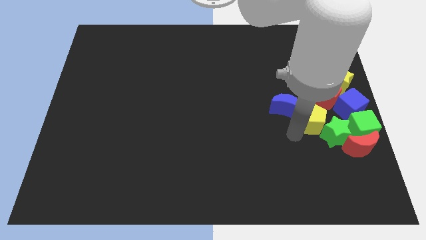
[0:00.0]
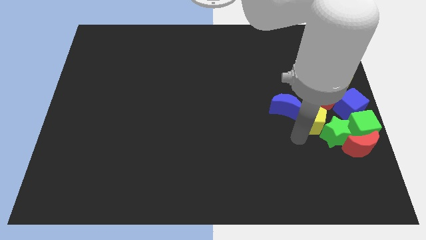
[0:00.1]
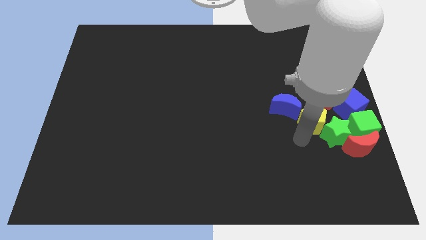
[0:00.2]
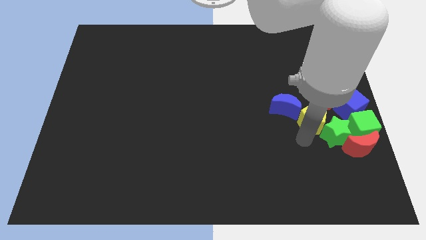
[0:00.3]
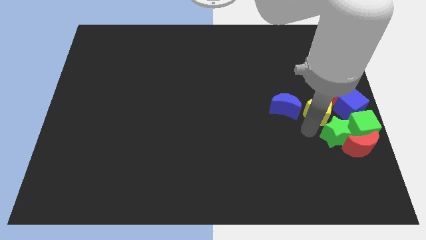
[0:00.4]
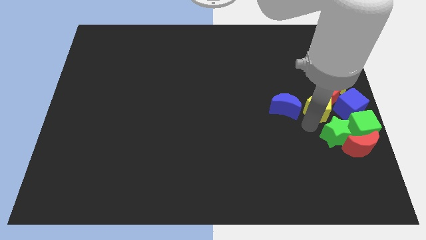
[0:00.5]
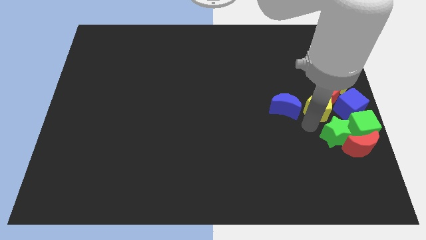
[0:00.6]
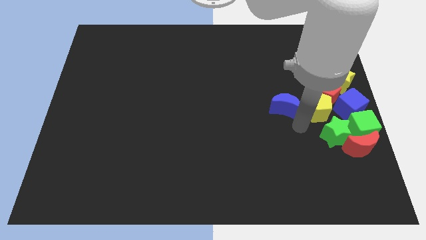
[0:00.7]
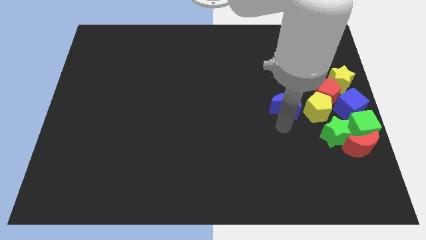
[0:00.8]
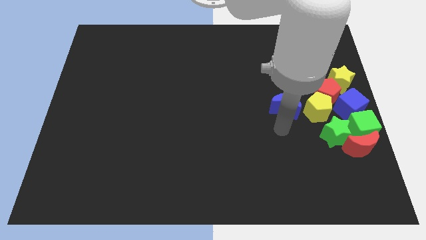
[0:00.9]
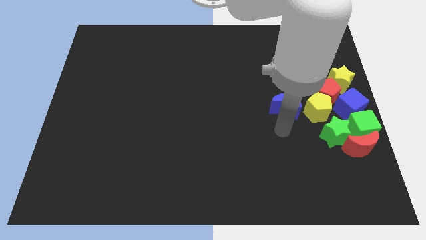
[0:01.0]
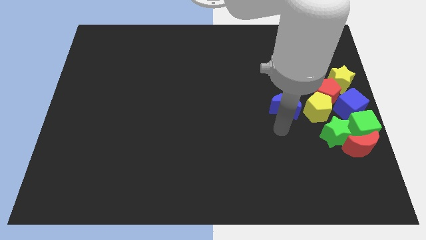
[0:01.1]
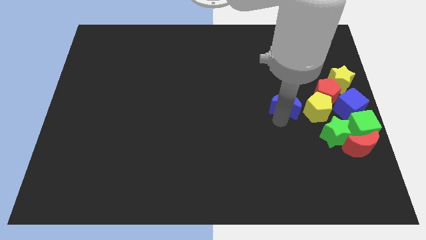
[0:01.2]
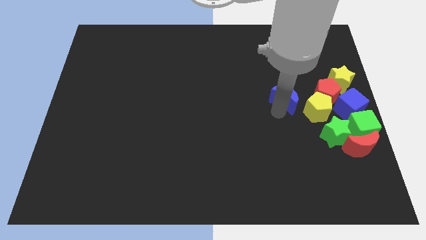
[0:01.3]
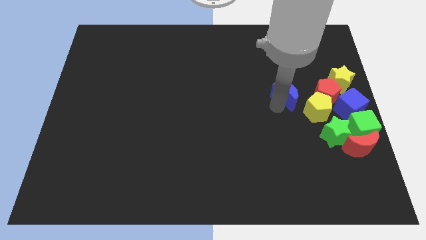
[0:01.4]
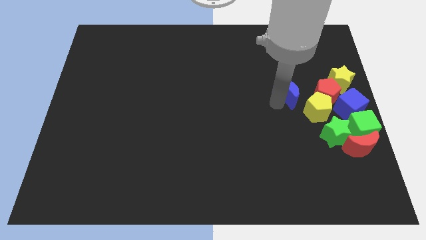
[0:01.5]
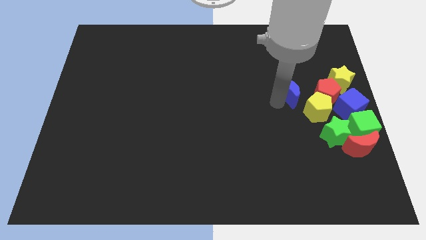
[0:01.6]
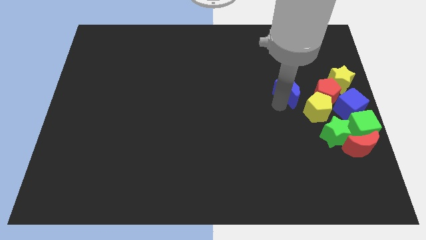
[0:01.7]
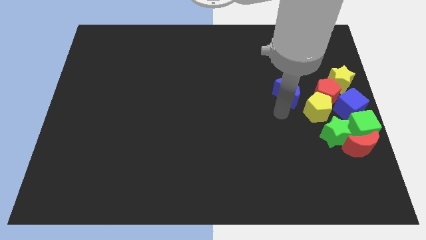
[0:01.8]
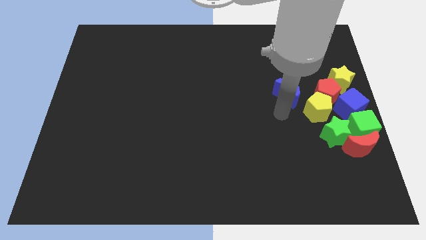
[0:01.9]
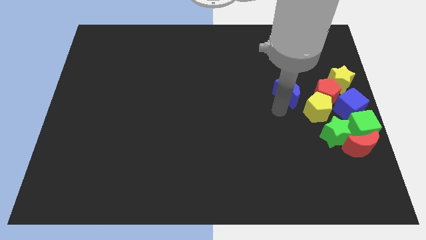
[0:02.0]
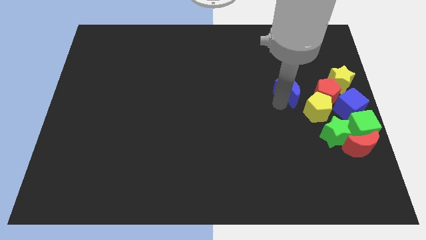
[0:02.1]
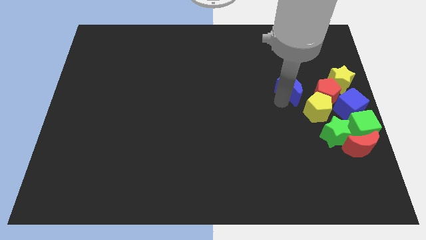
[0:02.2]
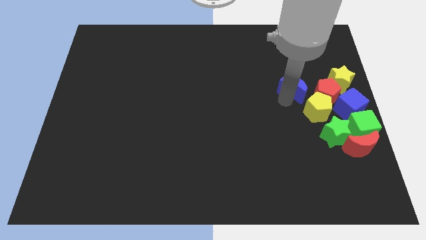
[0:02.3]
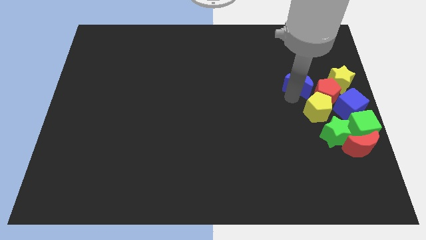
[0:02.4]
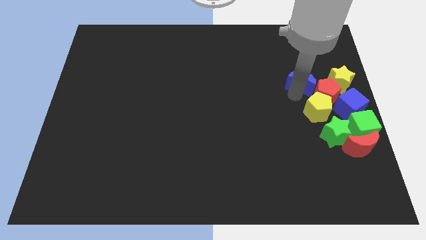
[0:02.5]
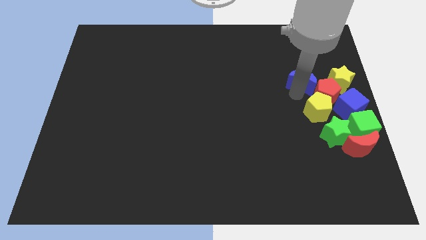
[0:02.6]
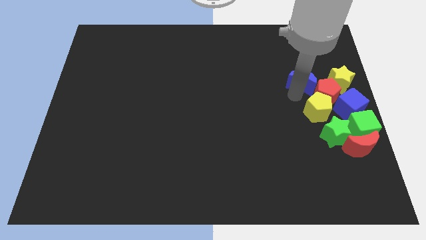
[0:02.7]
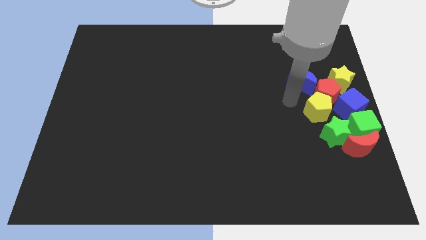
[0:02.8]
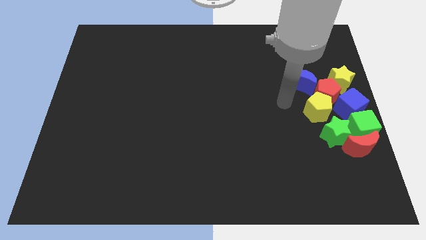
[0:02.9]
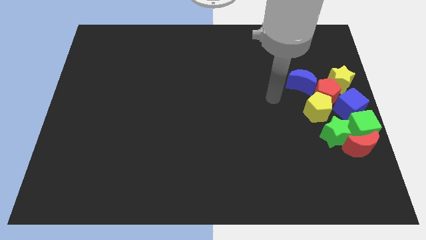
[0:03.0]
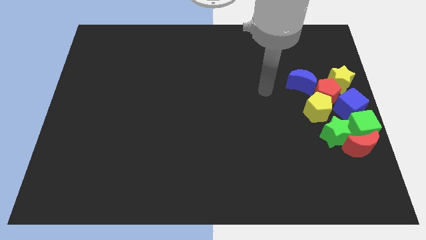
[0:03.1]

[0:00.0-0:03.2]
place the blue moon diagonal to the top of the red pentagon

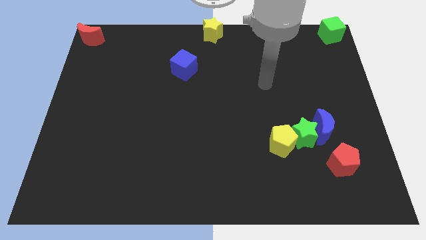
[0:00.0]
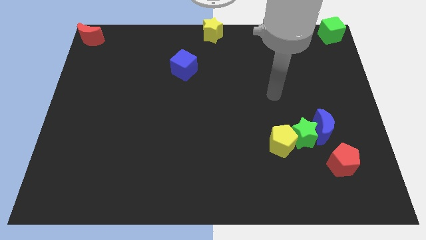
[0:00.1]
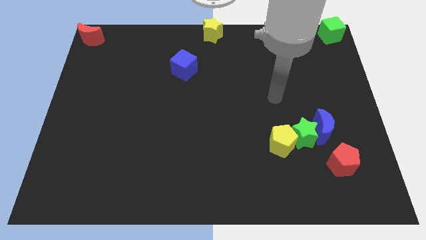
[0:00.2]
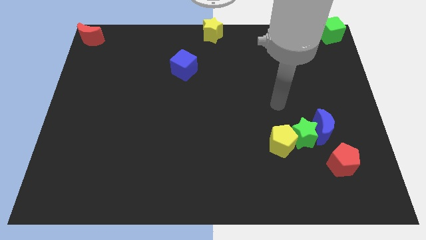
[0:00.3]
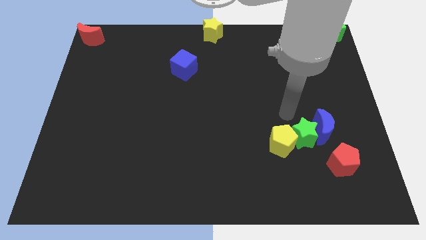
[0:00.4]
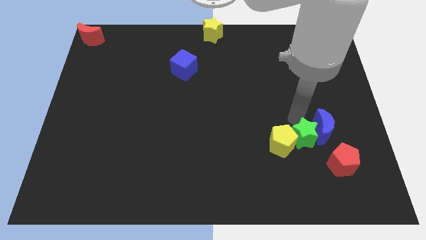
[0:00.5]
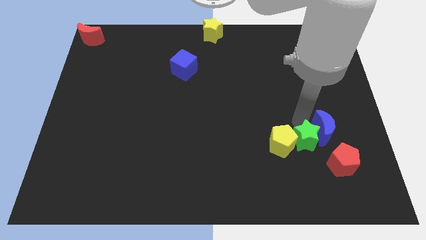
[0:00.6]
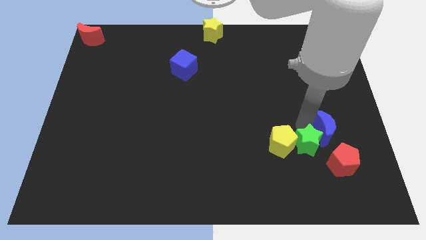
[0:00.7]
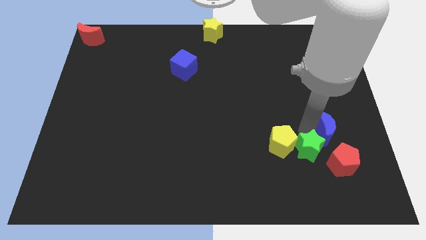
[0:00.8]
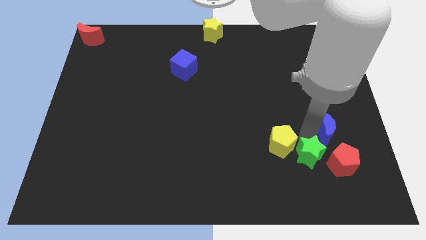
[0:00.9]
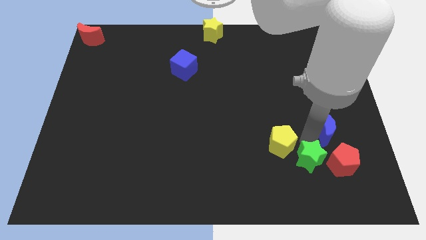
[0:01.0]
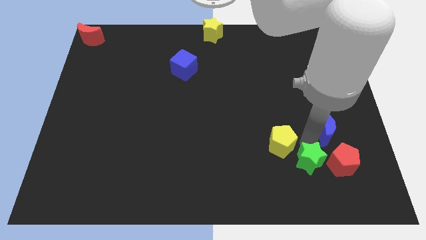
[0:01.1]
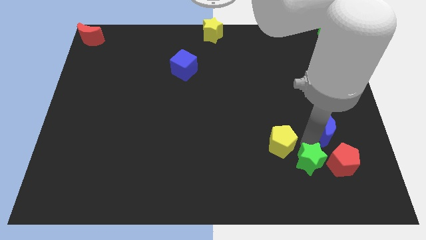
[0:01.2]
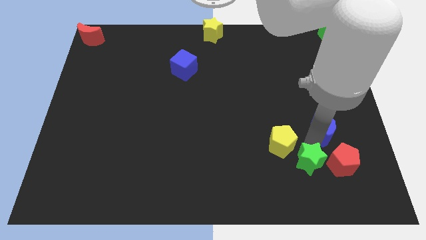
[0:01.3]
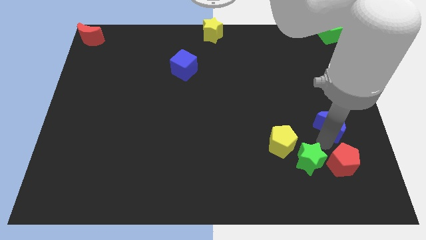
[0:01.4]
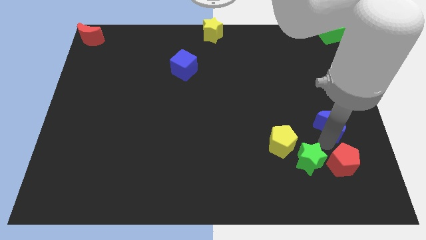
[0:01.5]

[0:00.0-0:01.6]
push the green star slightly towards the bottom side of the board

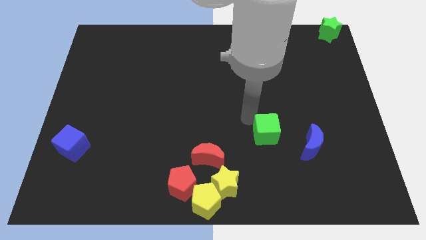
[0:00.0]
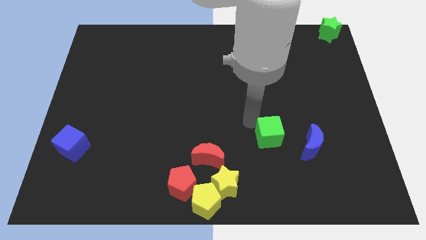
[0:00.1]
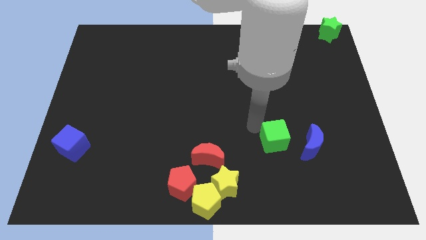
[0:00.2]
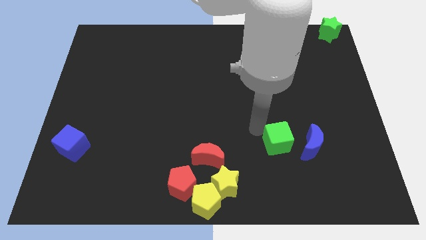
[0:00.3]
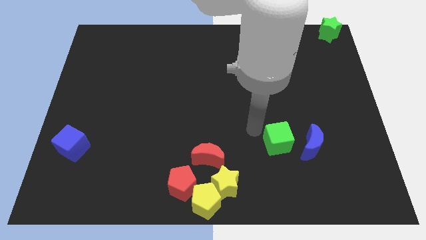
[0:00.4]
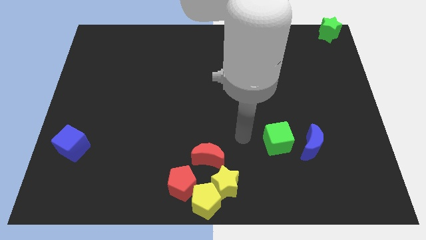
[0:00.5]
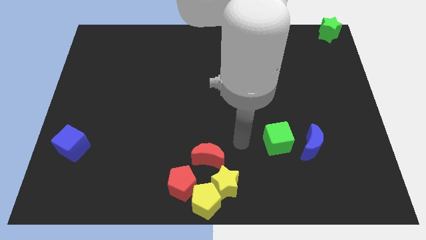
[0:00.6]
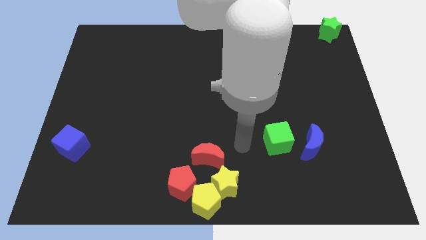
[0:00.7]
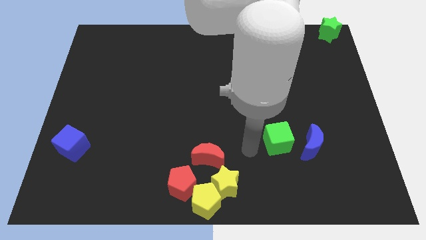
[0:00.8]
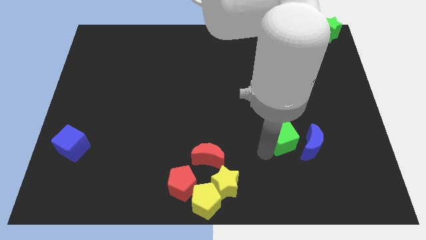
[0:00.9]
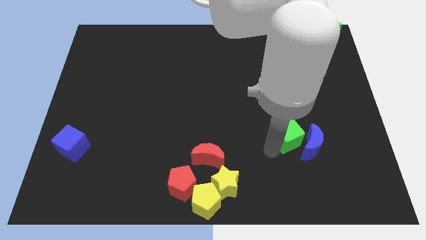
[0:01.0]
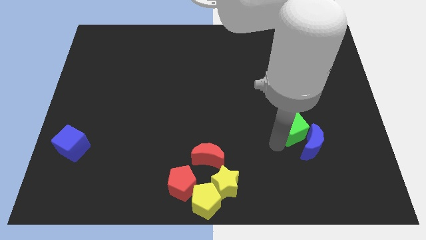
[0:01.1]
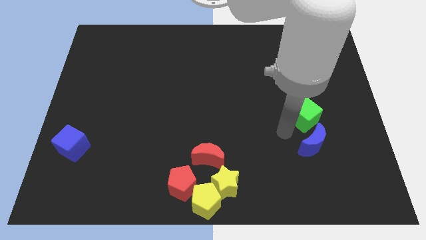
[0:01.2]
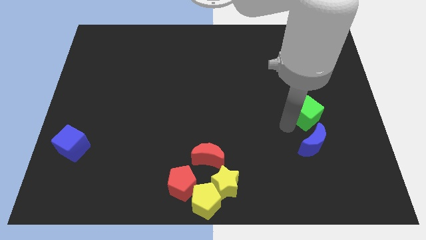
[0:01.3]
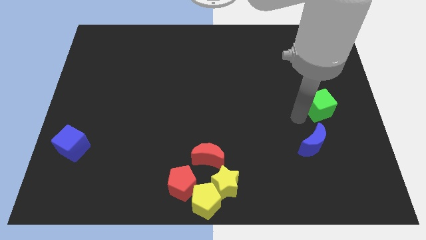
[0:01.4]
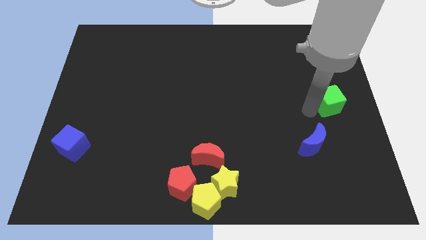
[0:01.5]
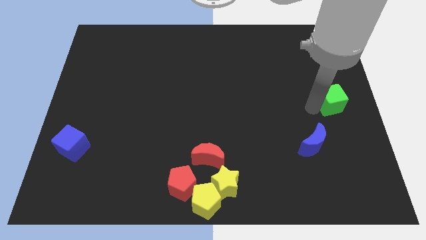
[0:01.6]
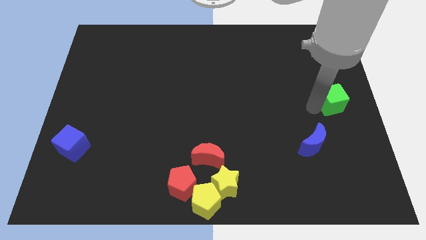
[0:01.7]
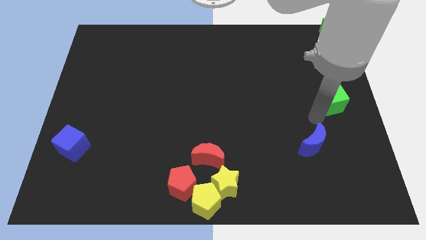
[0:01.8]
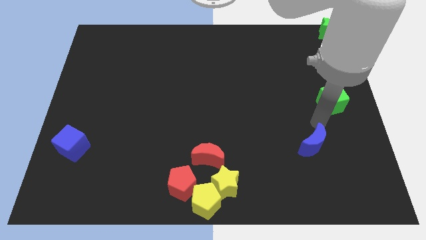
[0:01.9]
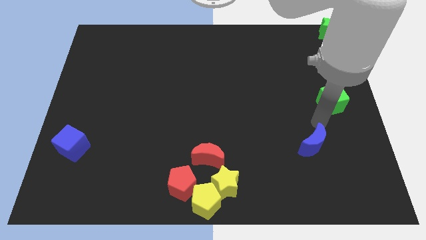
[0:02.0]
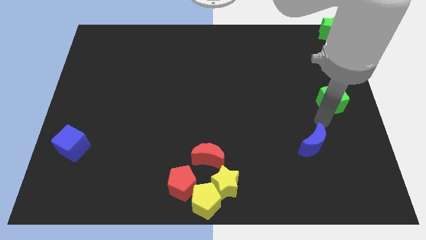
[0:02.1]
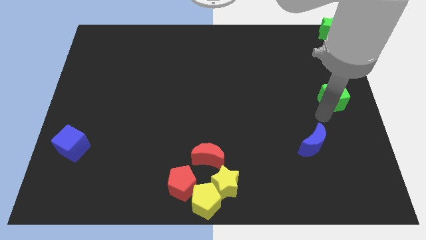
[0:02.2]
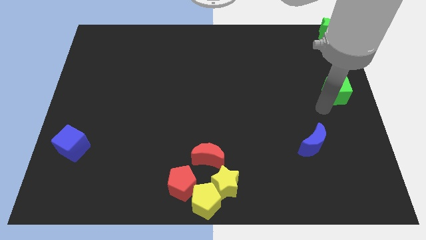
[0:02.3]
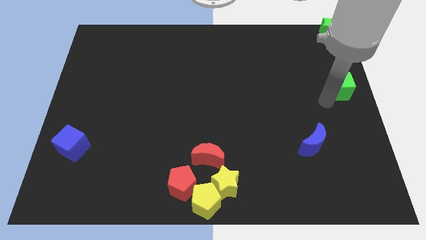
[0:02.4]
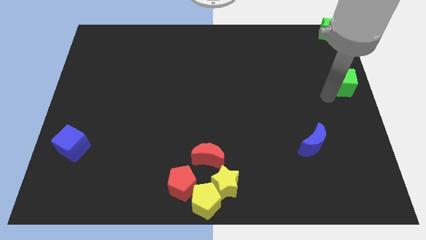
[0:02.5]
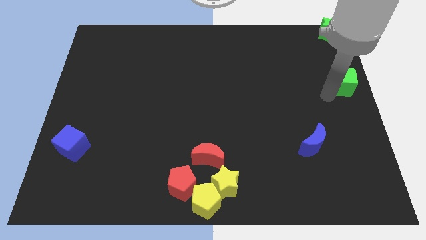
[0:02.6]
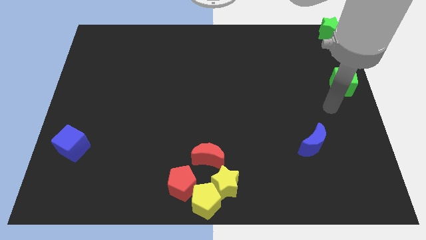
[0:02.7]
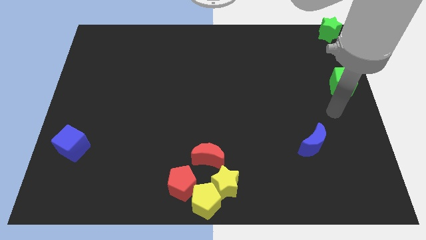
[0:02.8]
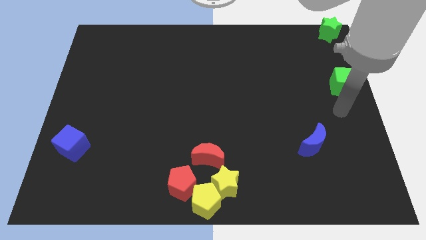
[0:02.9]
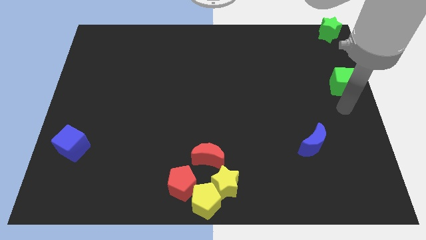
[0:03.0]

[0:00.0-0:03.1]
put the green cube vertically below the green star

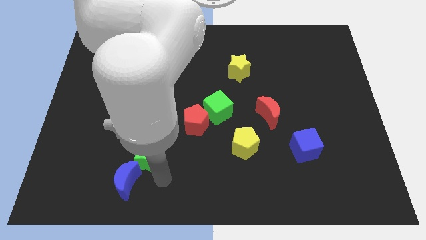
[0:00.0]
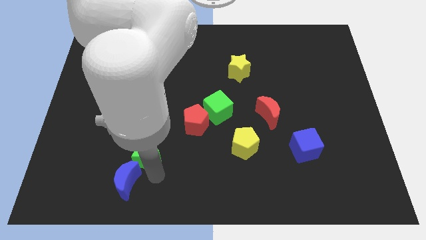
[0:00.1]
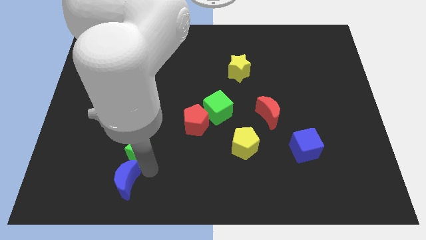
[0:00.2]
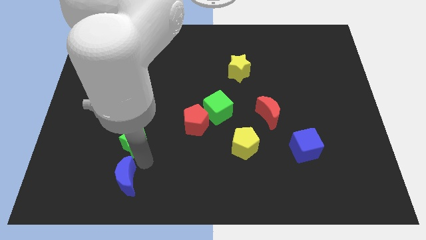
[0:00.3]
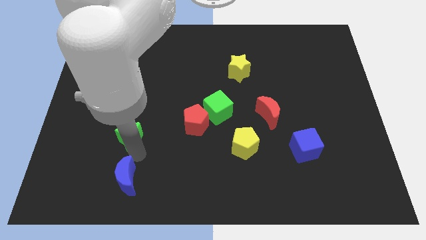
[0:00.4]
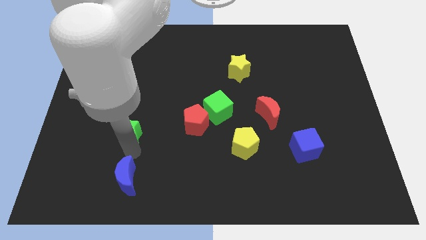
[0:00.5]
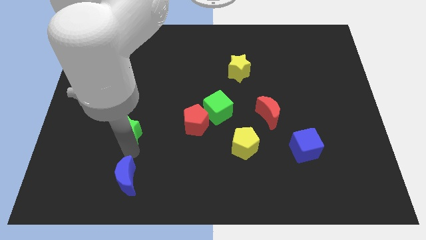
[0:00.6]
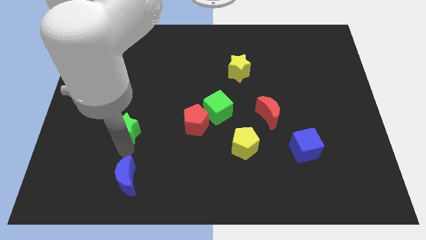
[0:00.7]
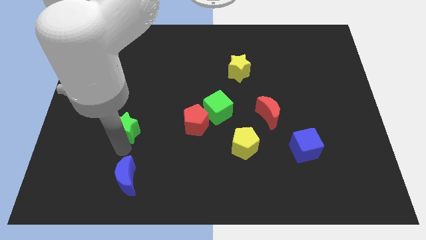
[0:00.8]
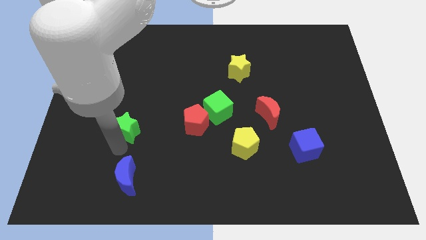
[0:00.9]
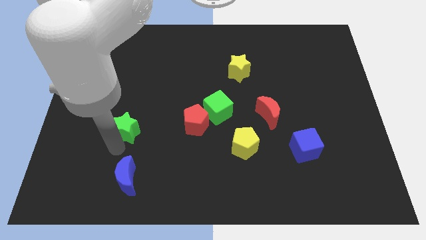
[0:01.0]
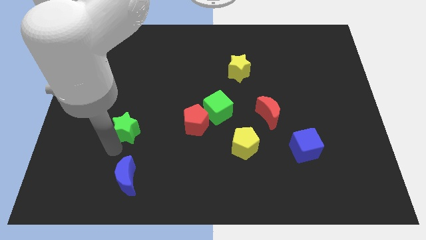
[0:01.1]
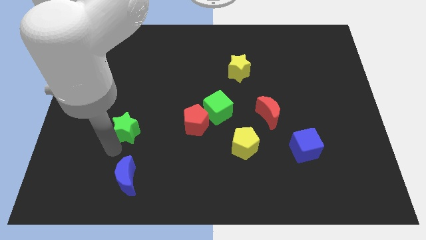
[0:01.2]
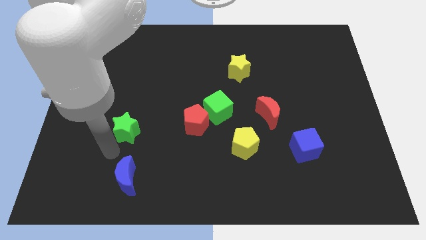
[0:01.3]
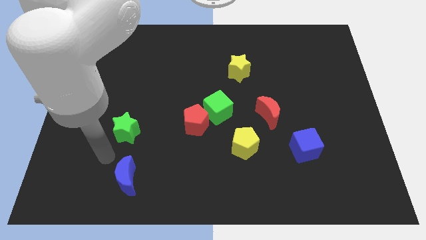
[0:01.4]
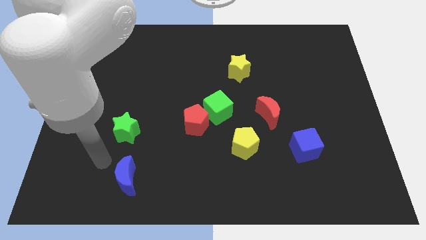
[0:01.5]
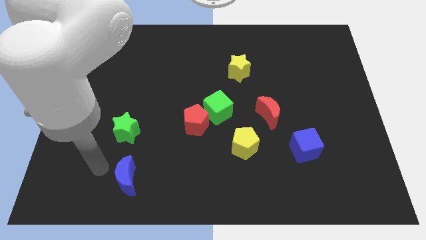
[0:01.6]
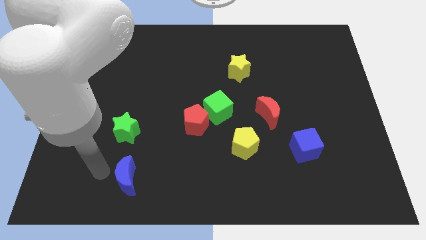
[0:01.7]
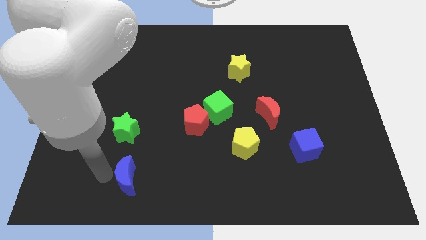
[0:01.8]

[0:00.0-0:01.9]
push the green star upwards slightly
